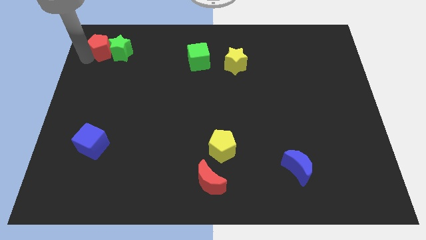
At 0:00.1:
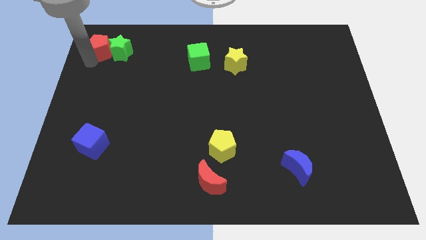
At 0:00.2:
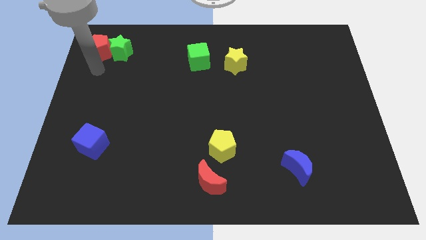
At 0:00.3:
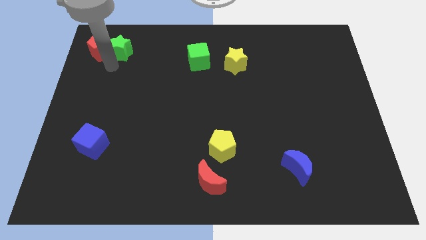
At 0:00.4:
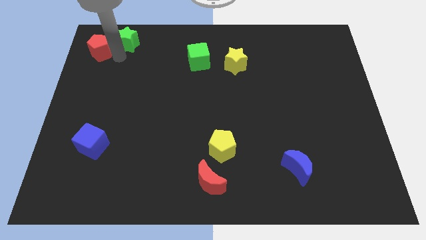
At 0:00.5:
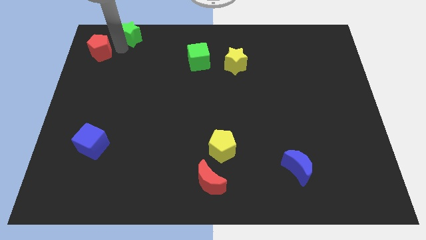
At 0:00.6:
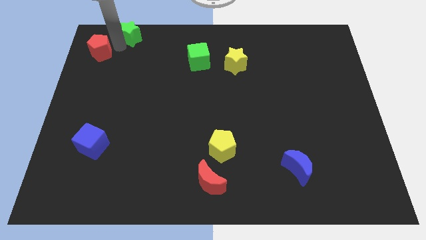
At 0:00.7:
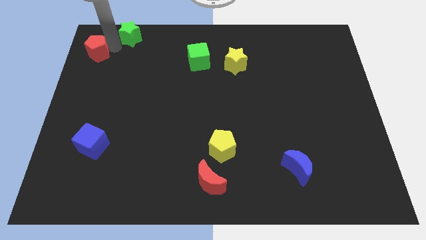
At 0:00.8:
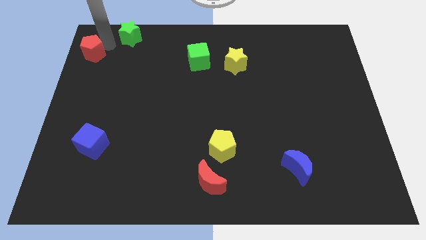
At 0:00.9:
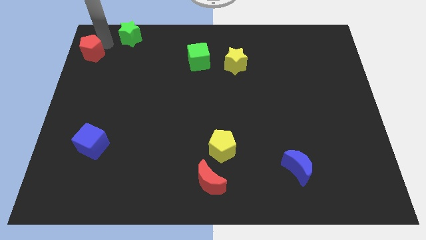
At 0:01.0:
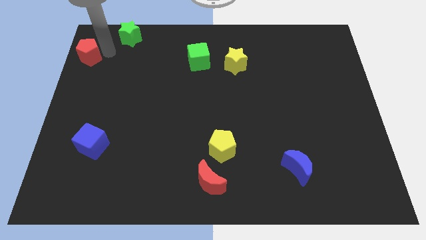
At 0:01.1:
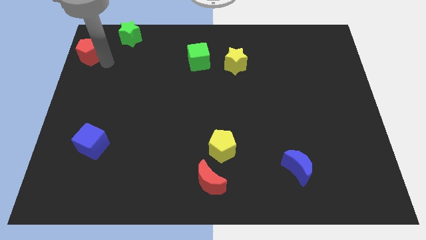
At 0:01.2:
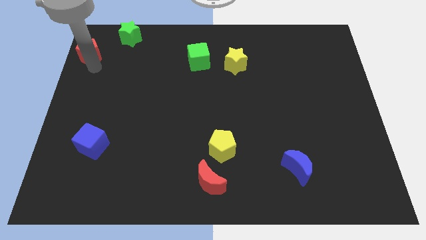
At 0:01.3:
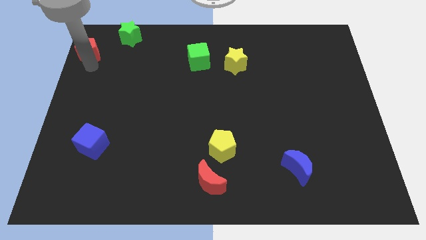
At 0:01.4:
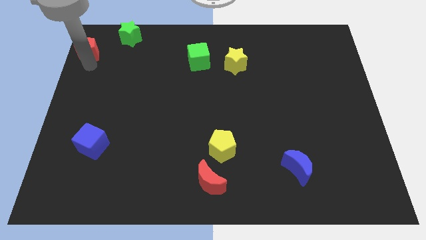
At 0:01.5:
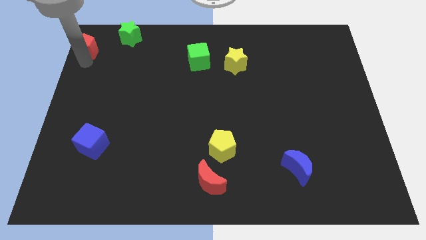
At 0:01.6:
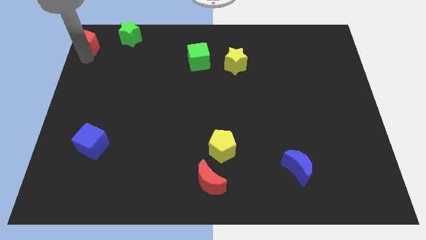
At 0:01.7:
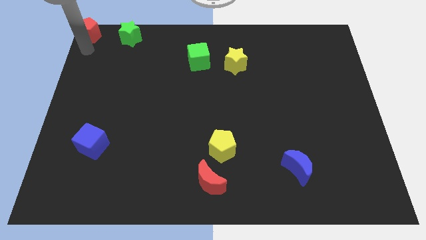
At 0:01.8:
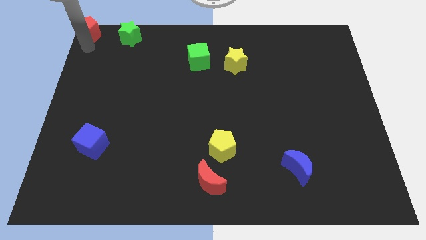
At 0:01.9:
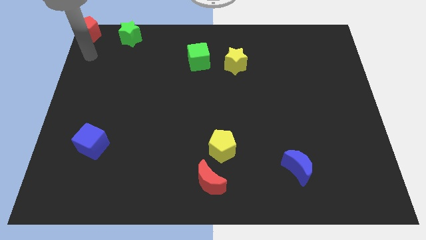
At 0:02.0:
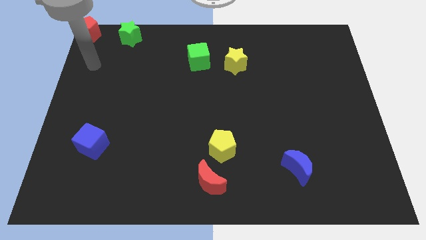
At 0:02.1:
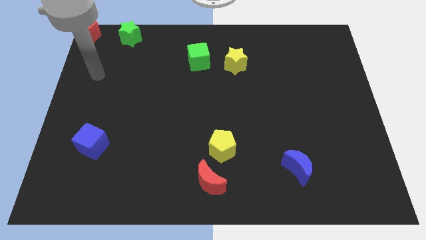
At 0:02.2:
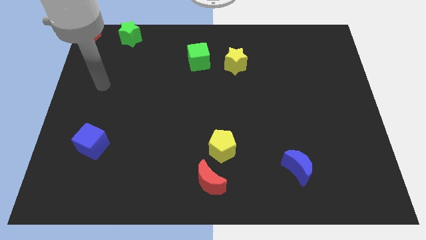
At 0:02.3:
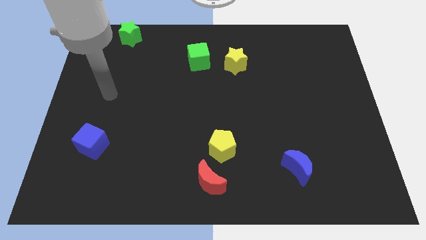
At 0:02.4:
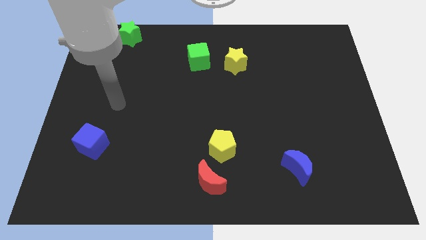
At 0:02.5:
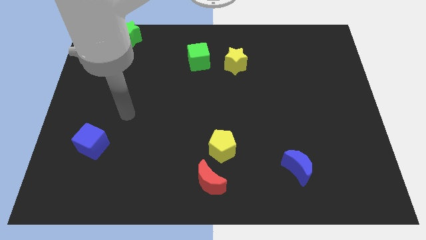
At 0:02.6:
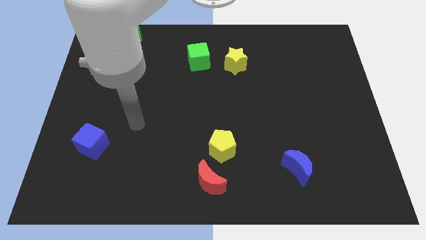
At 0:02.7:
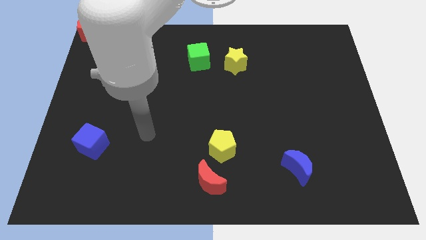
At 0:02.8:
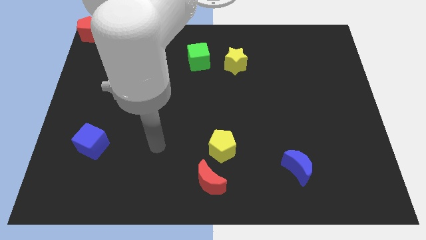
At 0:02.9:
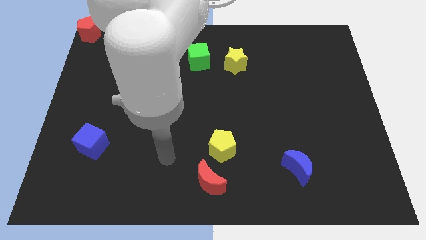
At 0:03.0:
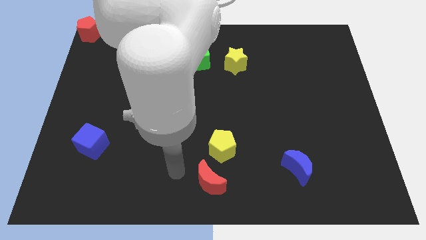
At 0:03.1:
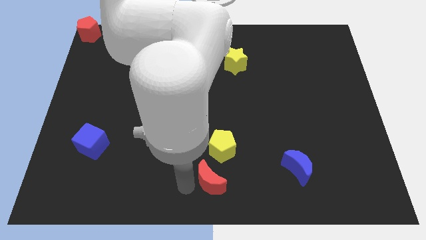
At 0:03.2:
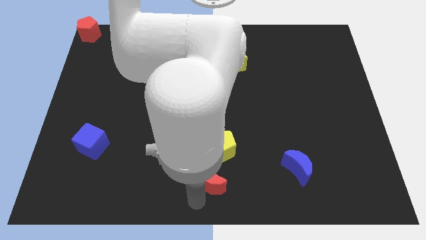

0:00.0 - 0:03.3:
separate red pentagon and the green star

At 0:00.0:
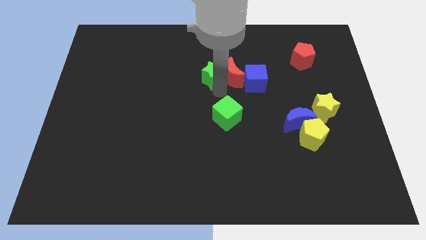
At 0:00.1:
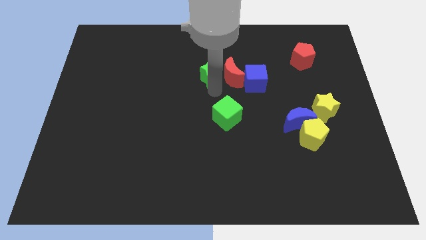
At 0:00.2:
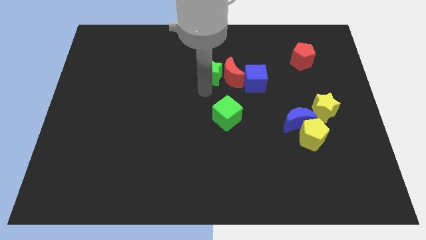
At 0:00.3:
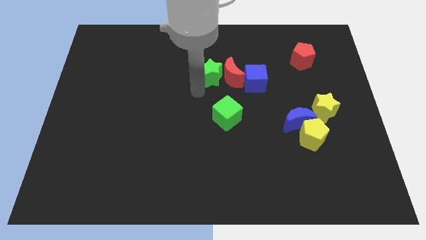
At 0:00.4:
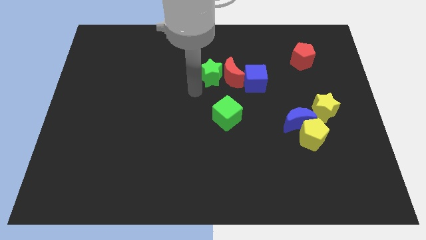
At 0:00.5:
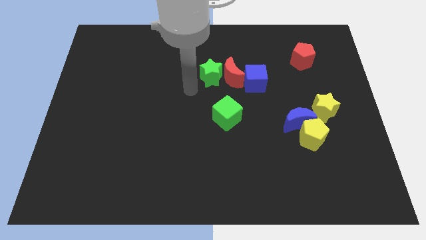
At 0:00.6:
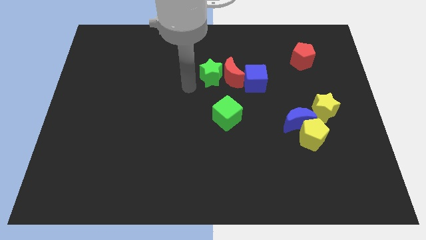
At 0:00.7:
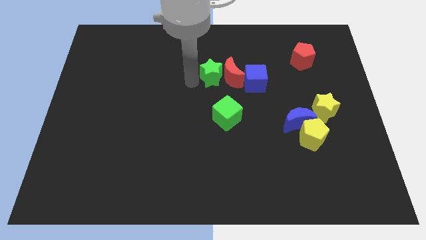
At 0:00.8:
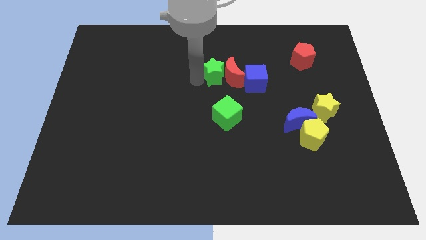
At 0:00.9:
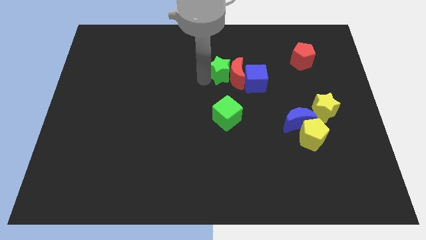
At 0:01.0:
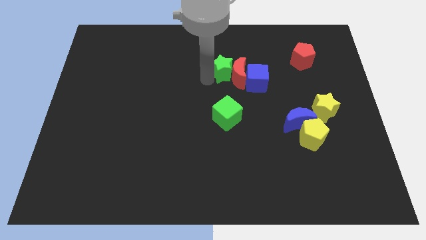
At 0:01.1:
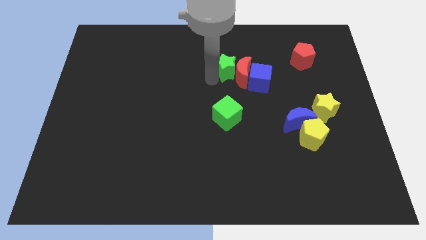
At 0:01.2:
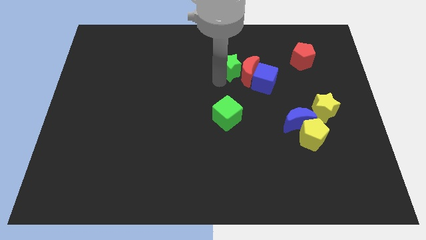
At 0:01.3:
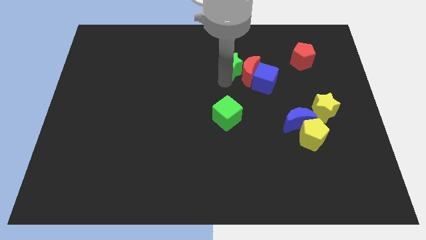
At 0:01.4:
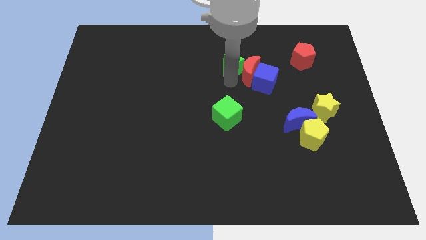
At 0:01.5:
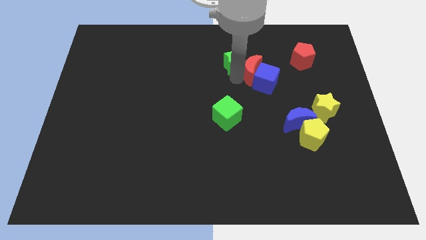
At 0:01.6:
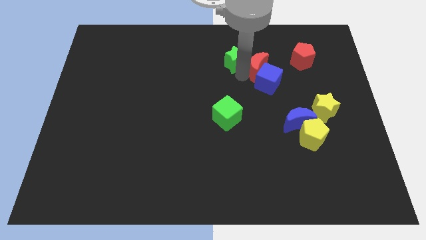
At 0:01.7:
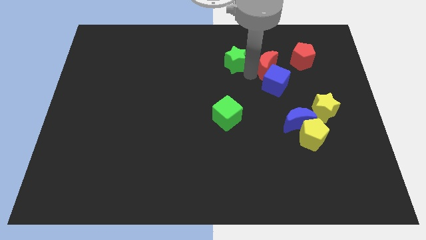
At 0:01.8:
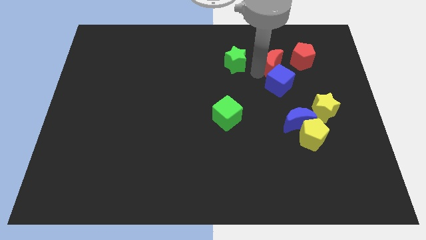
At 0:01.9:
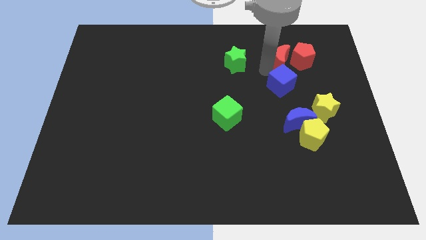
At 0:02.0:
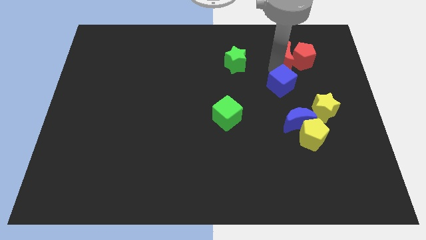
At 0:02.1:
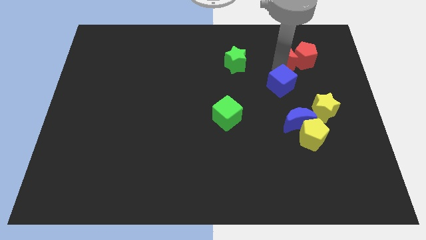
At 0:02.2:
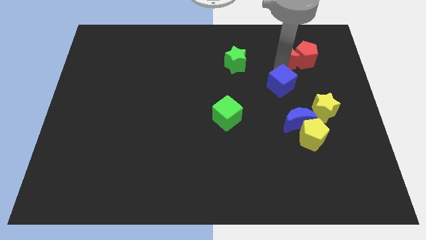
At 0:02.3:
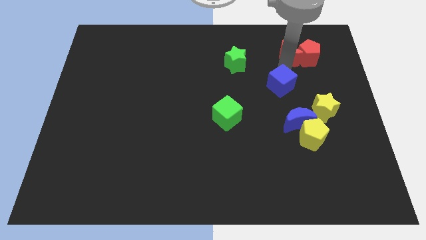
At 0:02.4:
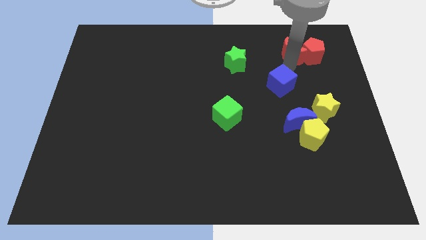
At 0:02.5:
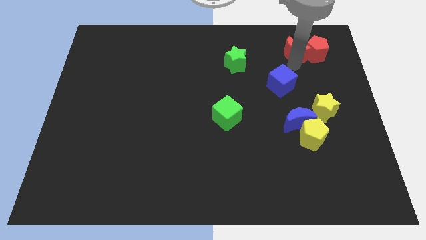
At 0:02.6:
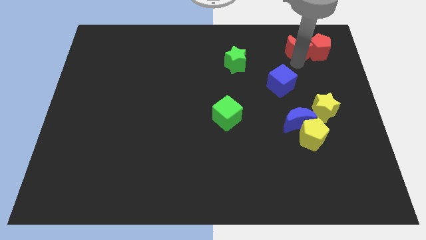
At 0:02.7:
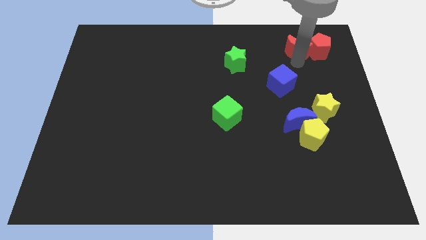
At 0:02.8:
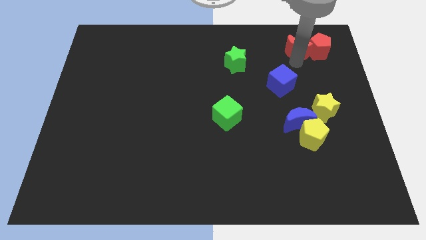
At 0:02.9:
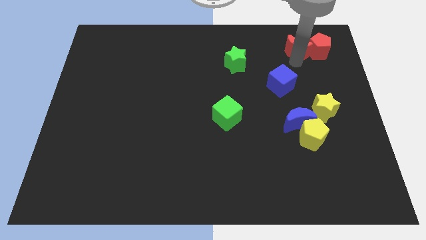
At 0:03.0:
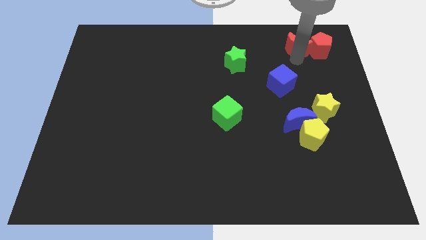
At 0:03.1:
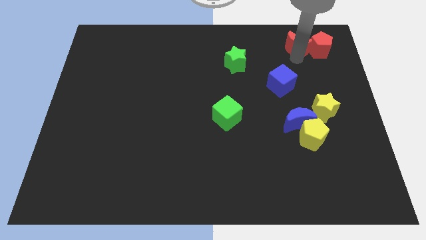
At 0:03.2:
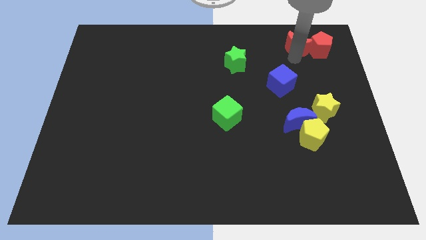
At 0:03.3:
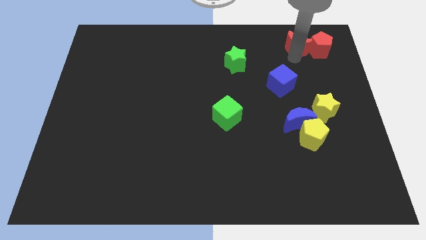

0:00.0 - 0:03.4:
push the red crescent into red pentagon

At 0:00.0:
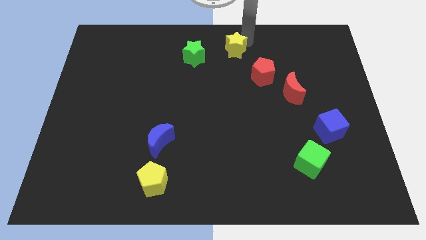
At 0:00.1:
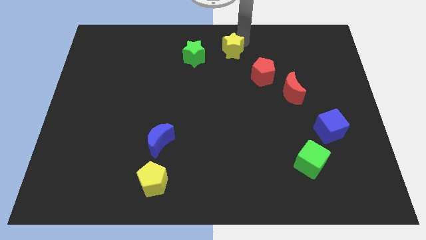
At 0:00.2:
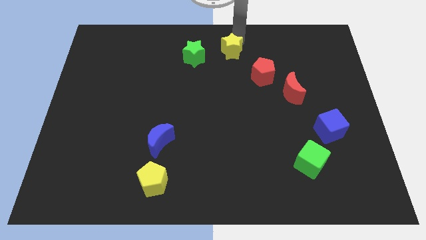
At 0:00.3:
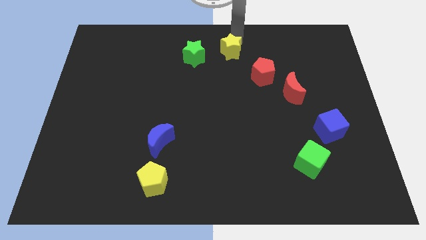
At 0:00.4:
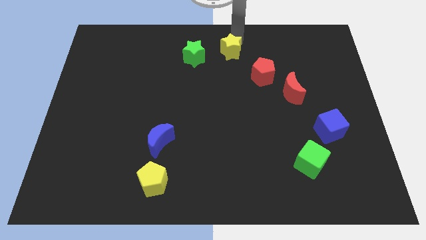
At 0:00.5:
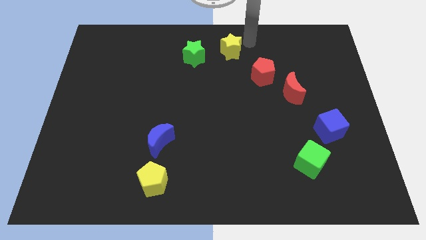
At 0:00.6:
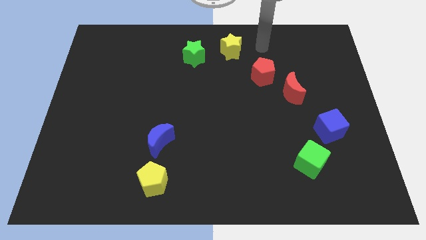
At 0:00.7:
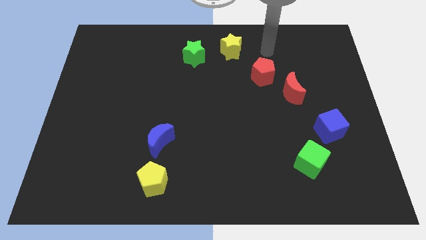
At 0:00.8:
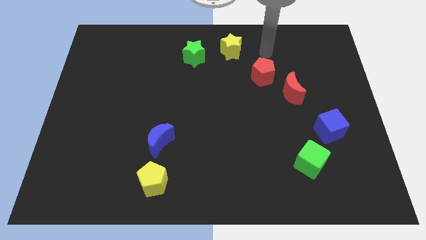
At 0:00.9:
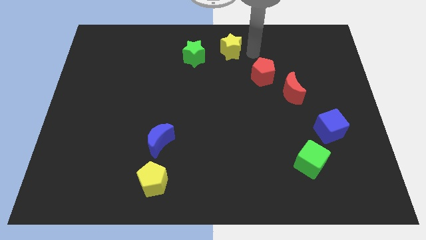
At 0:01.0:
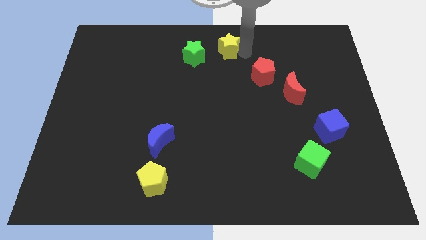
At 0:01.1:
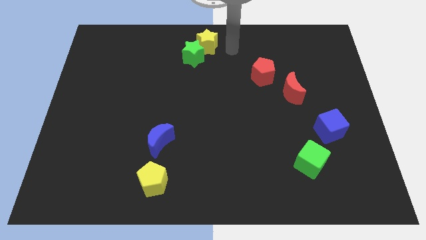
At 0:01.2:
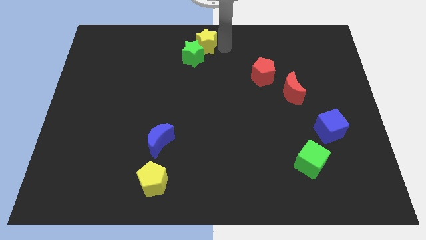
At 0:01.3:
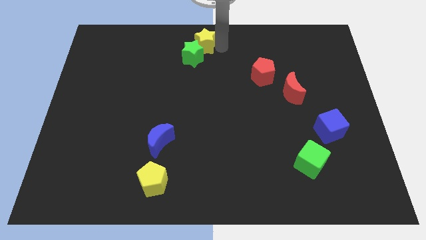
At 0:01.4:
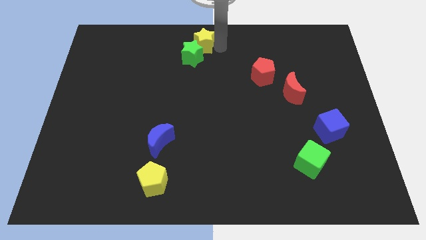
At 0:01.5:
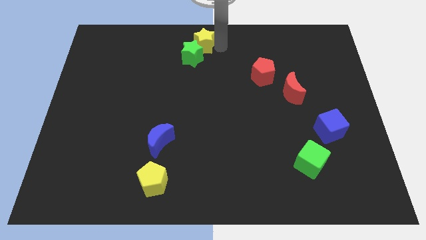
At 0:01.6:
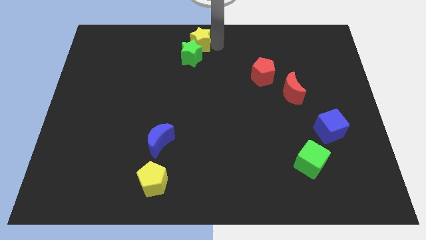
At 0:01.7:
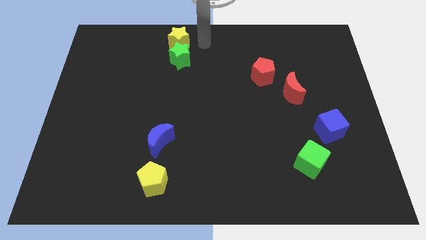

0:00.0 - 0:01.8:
push the yellow star into green star

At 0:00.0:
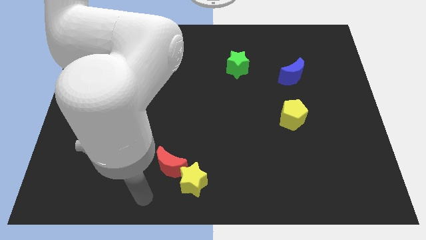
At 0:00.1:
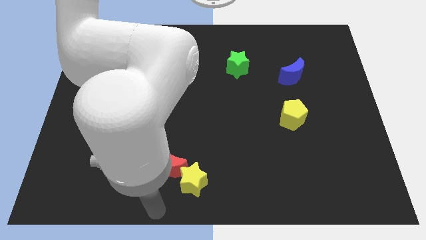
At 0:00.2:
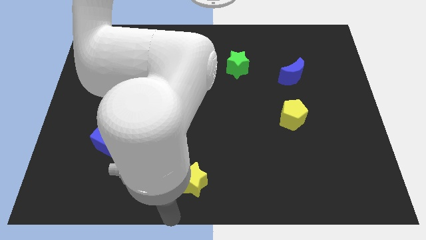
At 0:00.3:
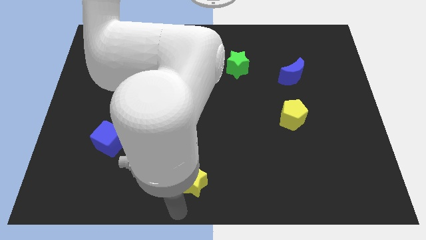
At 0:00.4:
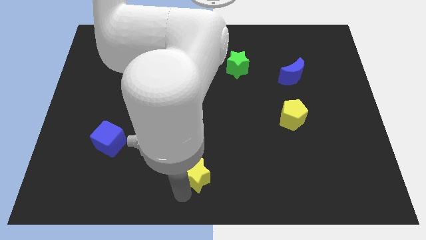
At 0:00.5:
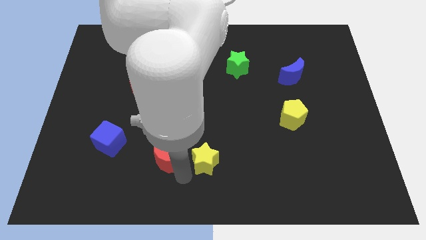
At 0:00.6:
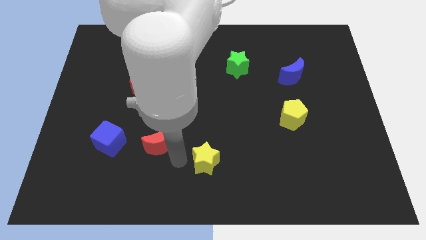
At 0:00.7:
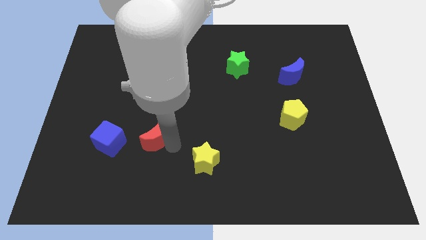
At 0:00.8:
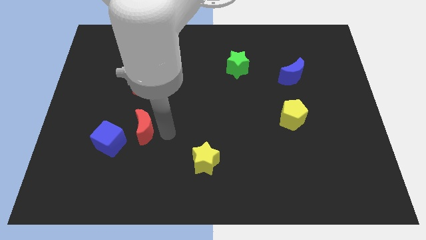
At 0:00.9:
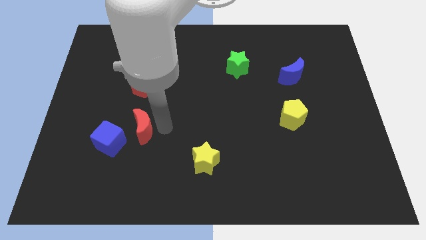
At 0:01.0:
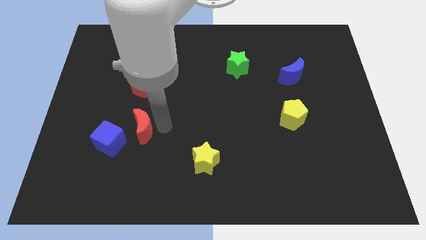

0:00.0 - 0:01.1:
separate red moon from yellow star
